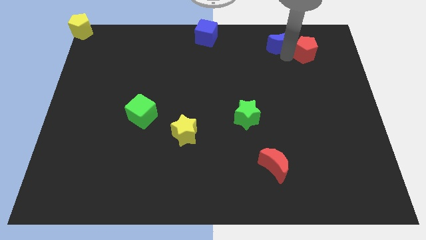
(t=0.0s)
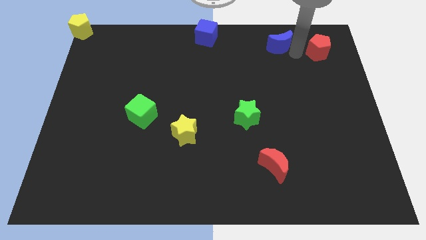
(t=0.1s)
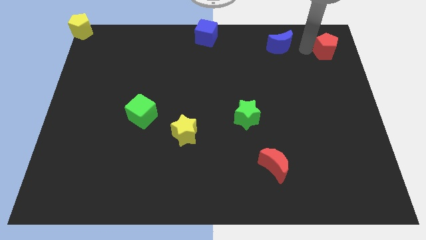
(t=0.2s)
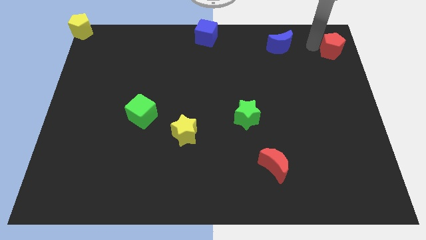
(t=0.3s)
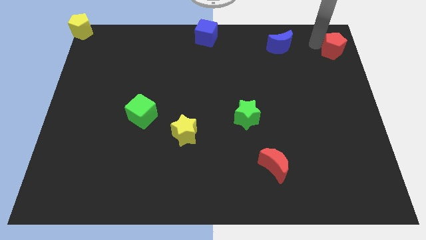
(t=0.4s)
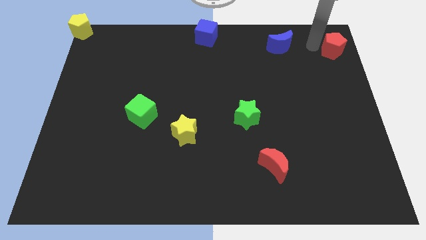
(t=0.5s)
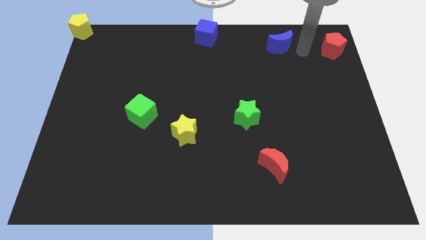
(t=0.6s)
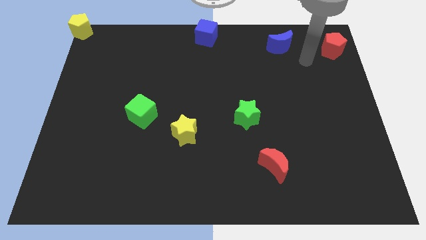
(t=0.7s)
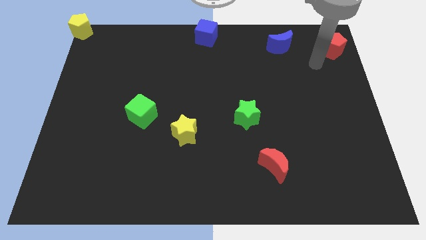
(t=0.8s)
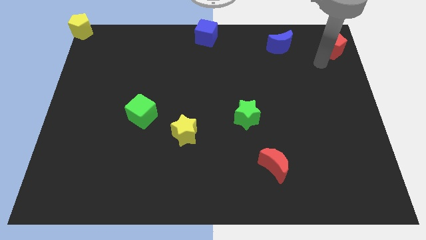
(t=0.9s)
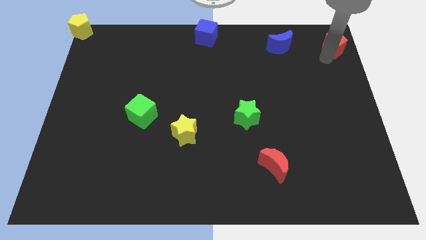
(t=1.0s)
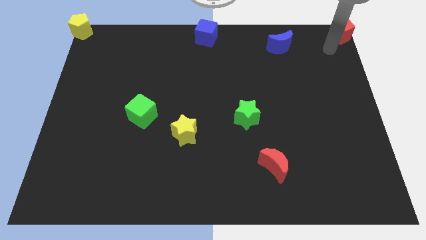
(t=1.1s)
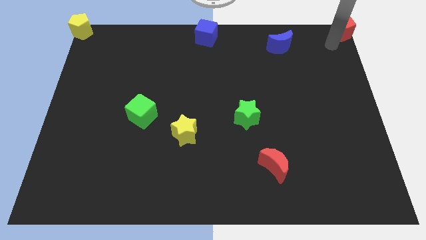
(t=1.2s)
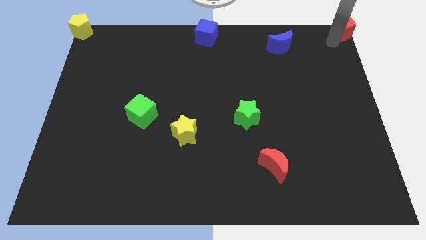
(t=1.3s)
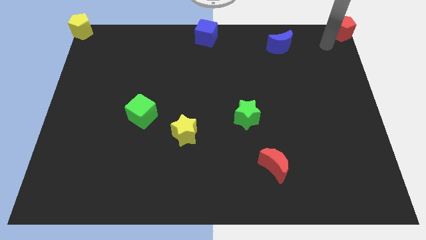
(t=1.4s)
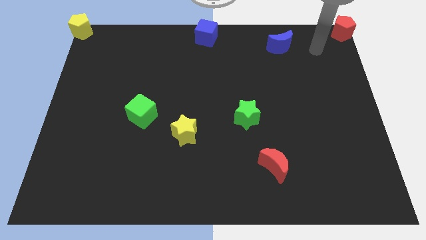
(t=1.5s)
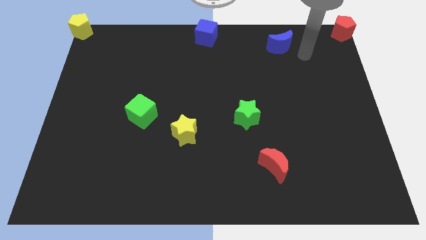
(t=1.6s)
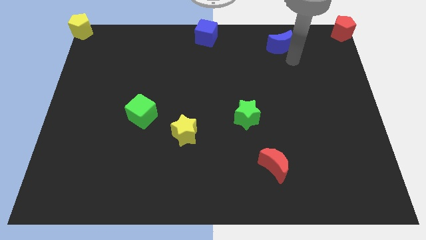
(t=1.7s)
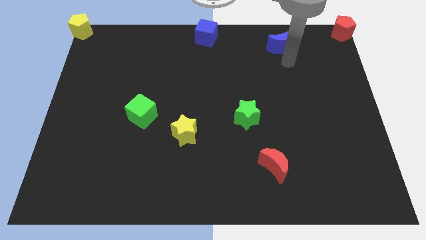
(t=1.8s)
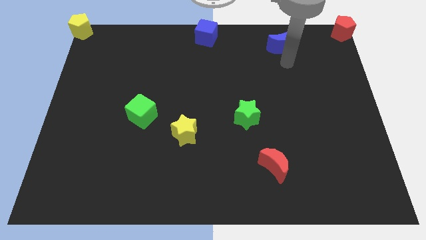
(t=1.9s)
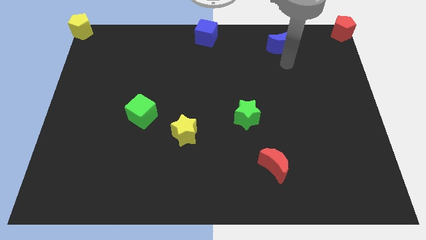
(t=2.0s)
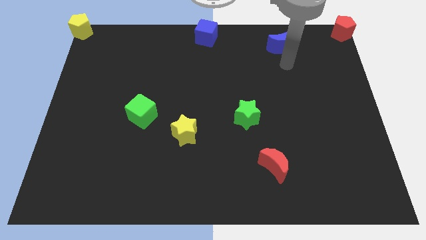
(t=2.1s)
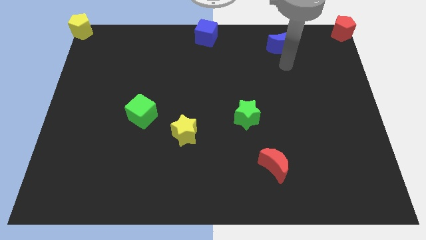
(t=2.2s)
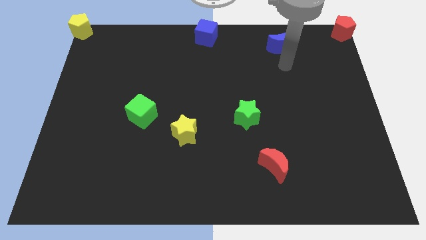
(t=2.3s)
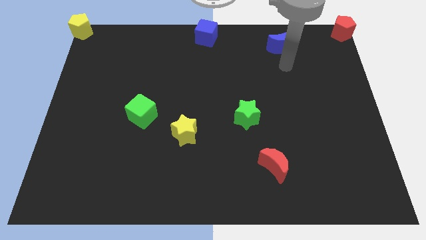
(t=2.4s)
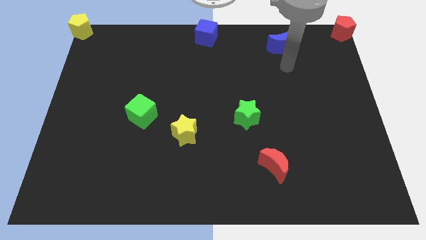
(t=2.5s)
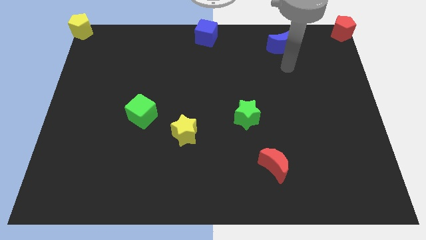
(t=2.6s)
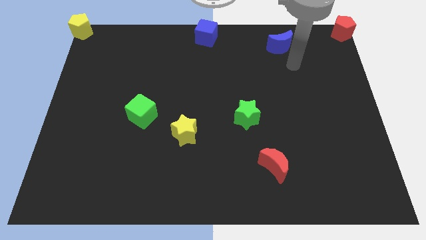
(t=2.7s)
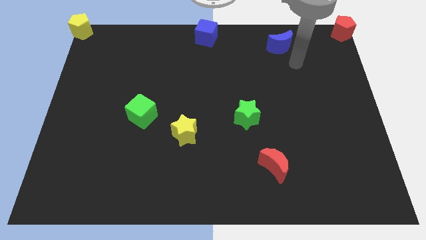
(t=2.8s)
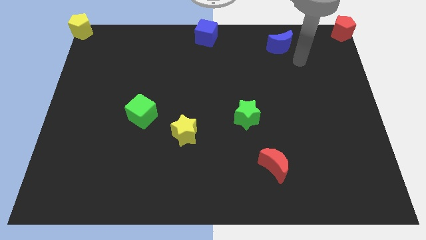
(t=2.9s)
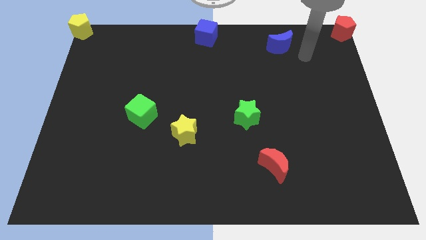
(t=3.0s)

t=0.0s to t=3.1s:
put the red pentagon at the top right corner of the board

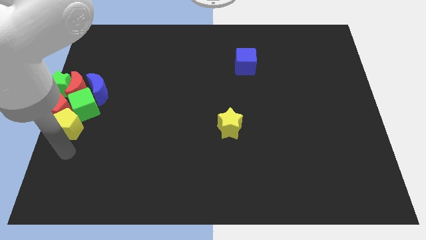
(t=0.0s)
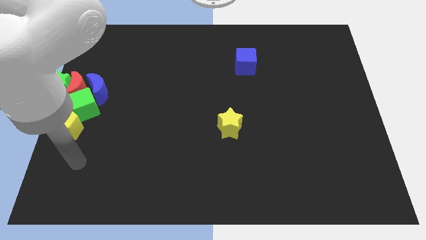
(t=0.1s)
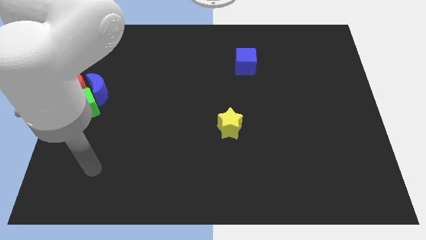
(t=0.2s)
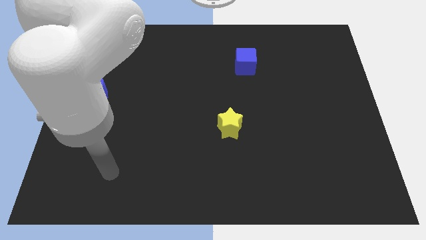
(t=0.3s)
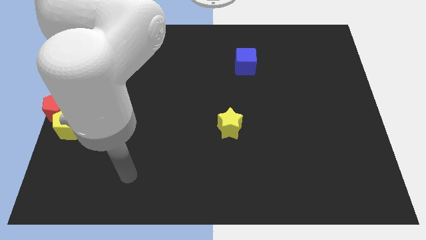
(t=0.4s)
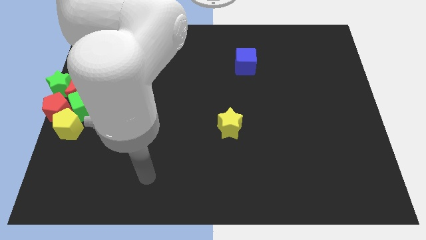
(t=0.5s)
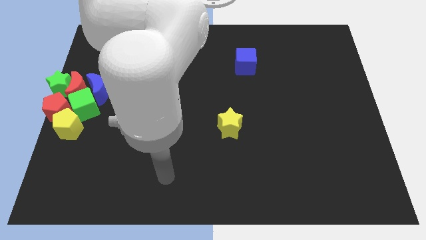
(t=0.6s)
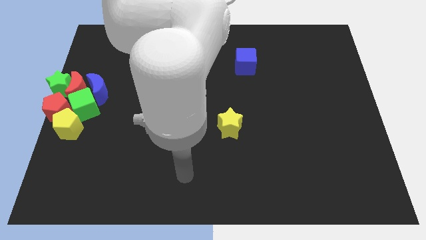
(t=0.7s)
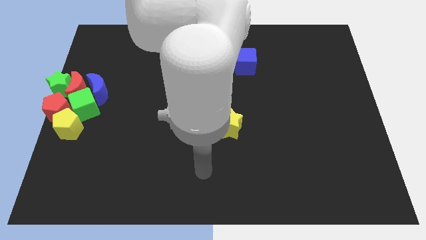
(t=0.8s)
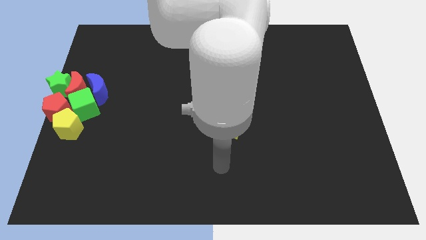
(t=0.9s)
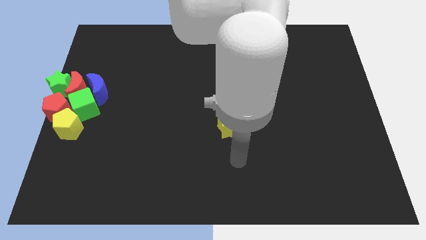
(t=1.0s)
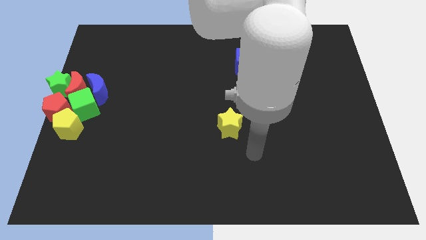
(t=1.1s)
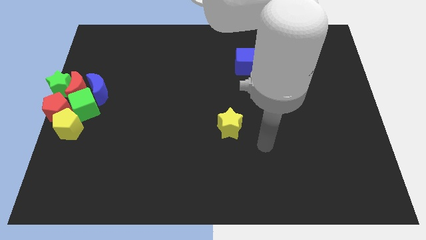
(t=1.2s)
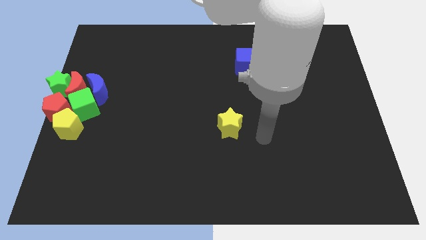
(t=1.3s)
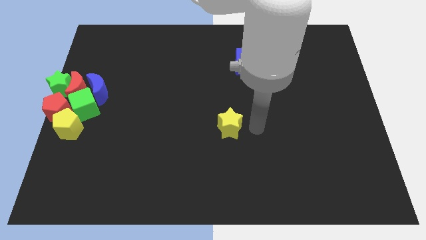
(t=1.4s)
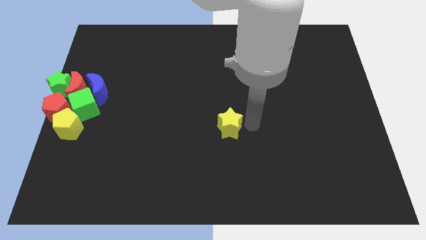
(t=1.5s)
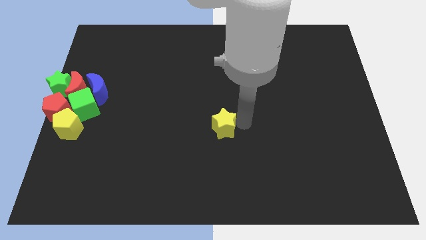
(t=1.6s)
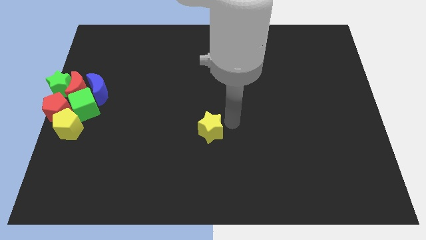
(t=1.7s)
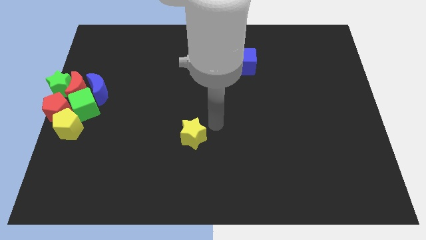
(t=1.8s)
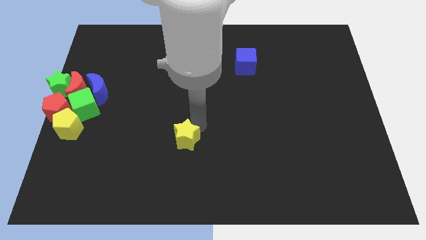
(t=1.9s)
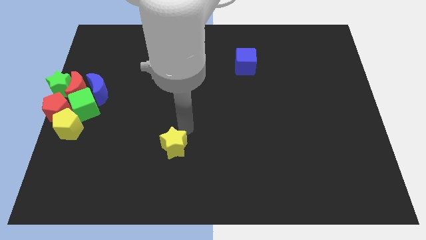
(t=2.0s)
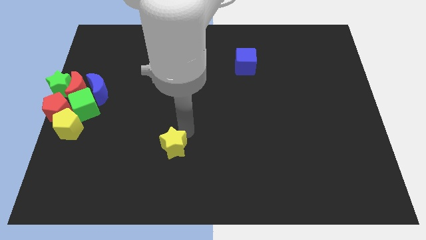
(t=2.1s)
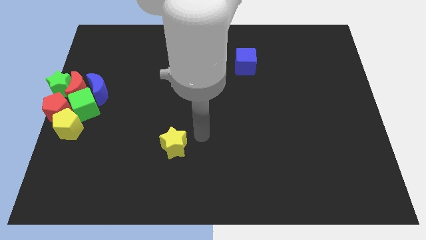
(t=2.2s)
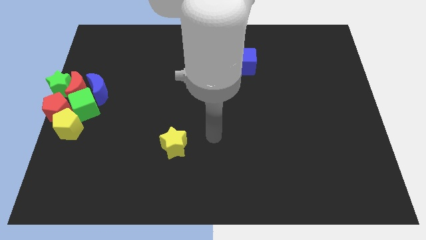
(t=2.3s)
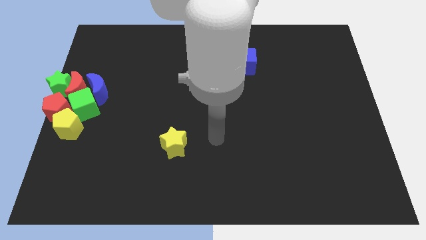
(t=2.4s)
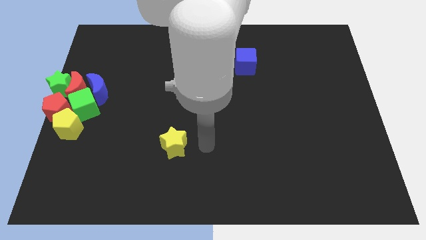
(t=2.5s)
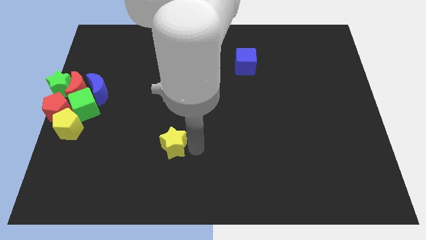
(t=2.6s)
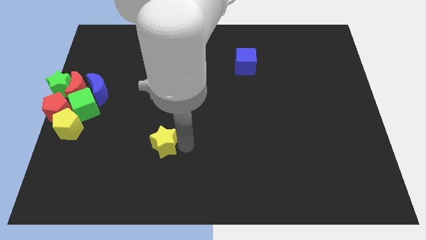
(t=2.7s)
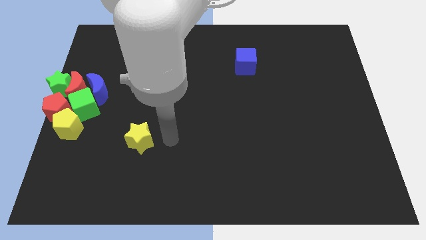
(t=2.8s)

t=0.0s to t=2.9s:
slightly move the yellow star to the left

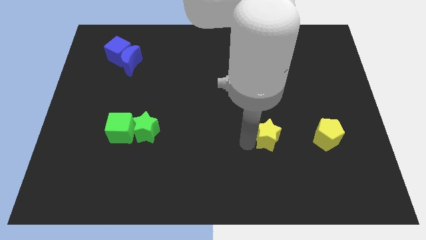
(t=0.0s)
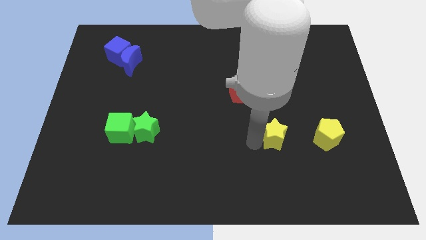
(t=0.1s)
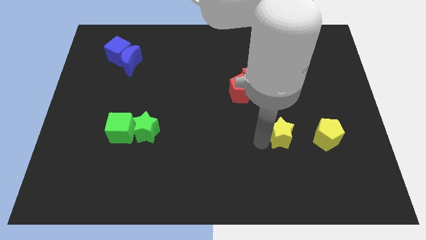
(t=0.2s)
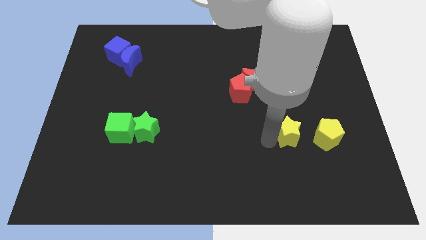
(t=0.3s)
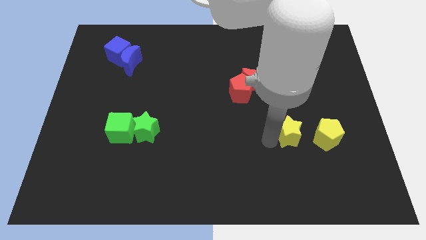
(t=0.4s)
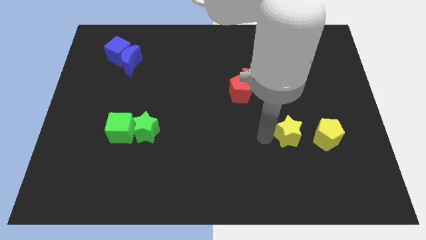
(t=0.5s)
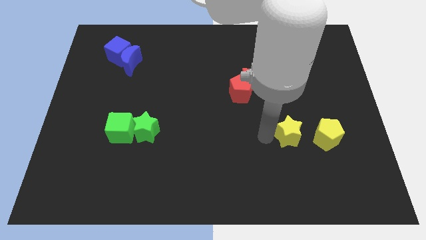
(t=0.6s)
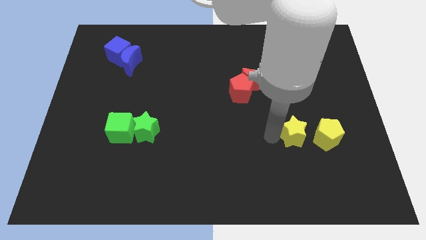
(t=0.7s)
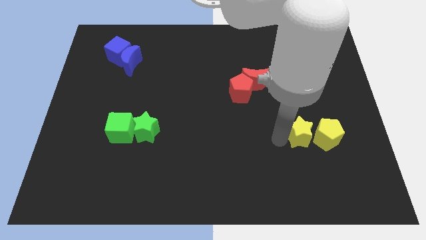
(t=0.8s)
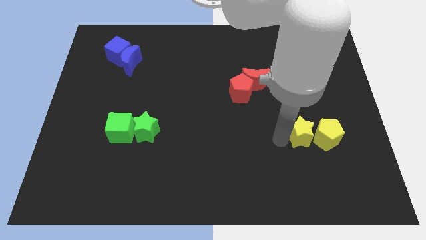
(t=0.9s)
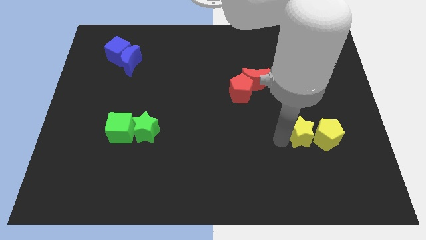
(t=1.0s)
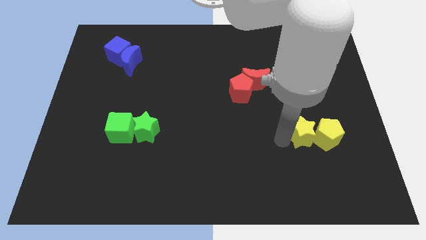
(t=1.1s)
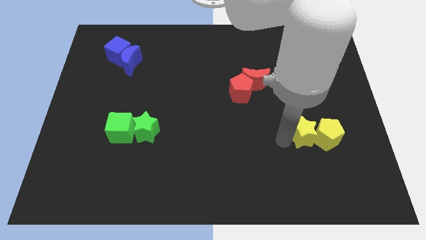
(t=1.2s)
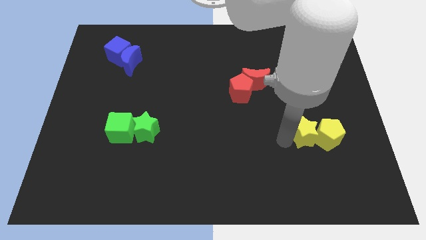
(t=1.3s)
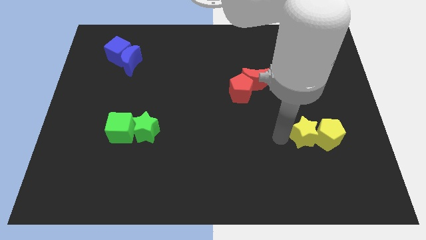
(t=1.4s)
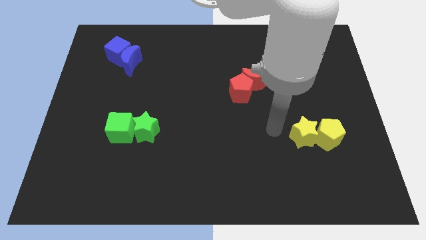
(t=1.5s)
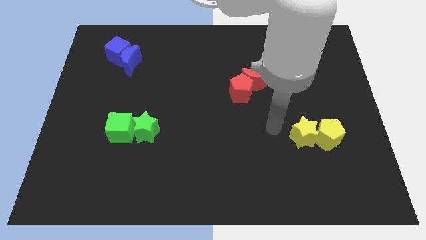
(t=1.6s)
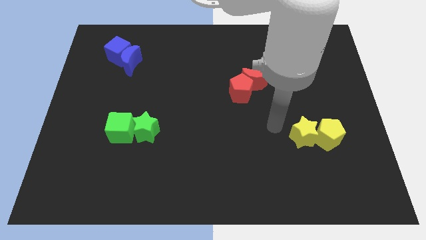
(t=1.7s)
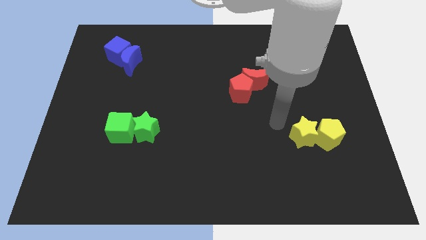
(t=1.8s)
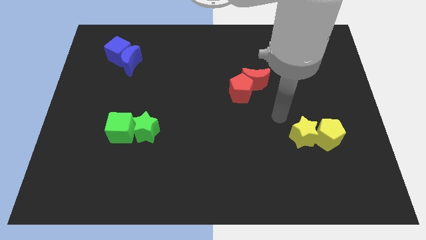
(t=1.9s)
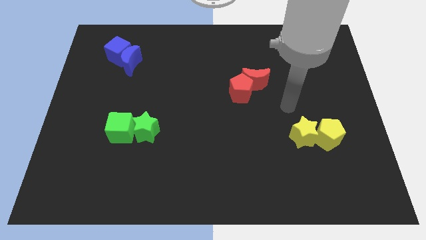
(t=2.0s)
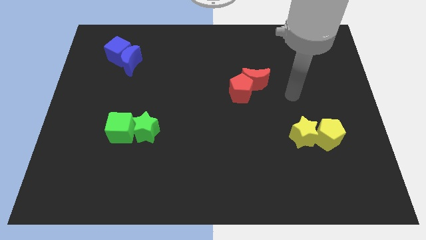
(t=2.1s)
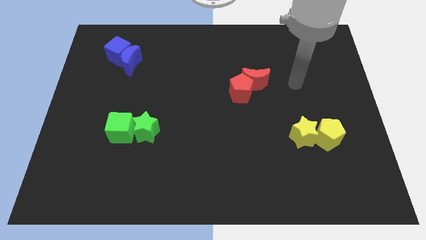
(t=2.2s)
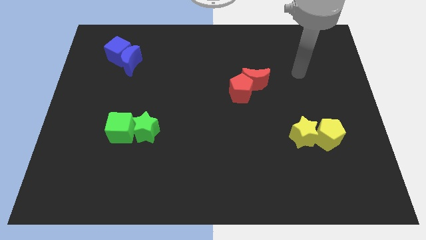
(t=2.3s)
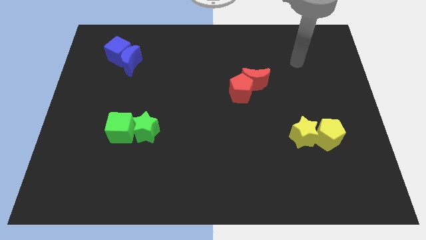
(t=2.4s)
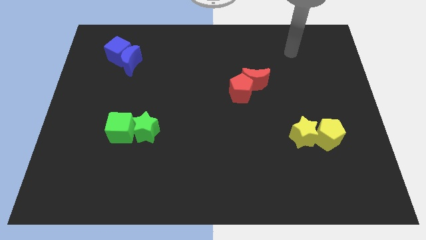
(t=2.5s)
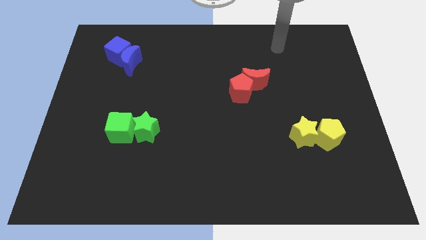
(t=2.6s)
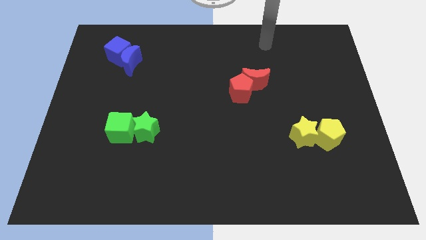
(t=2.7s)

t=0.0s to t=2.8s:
move the arm upwards of the board
